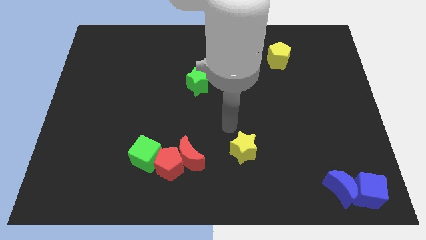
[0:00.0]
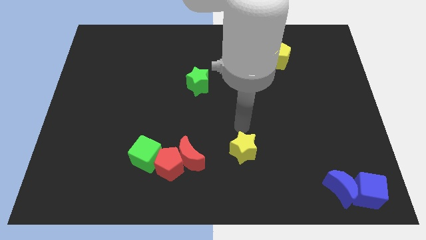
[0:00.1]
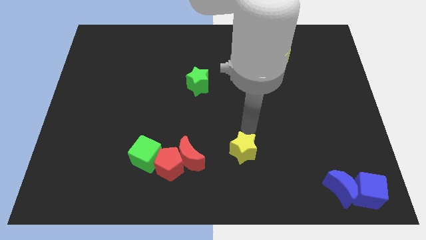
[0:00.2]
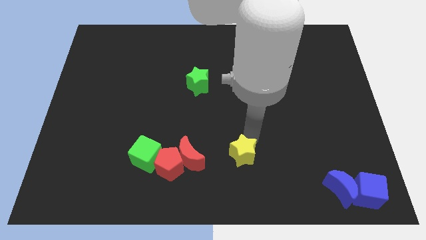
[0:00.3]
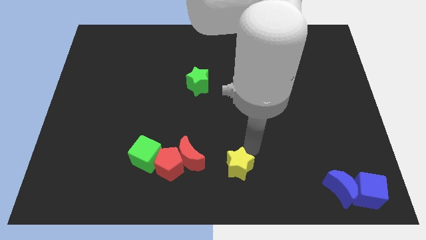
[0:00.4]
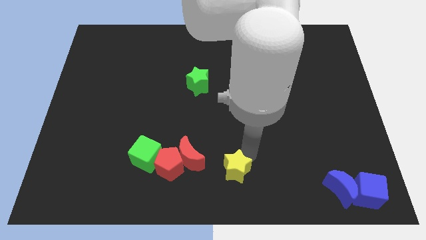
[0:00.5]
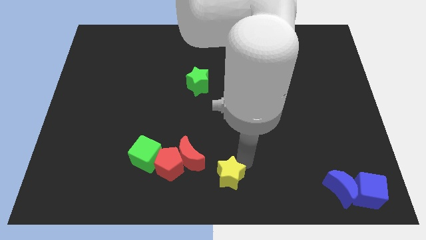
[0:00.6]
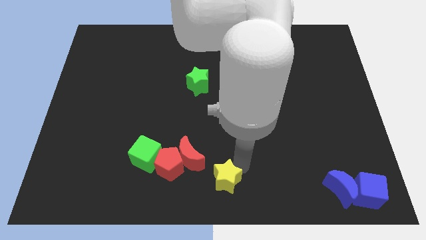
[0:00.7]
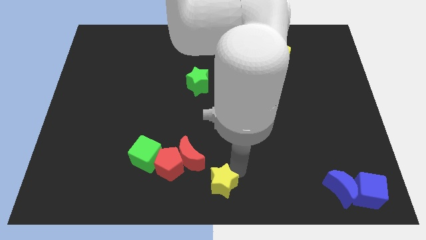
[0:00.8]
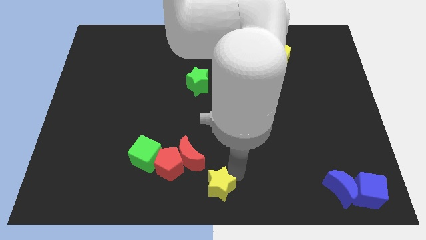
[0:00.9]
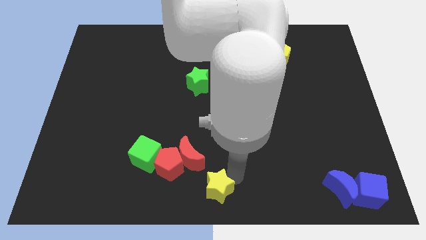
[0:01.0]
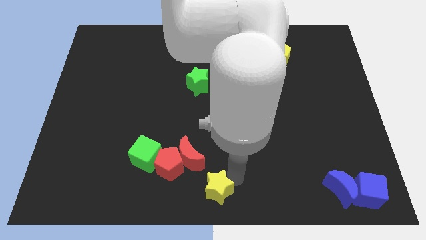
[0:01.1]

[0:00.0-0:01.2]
place the yellow star below the red moon

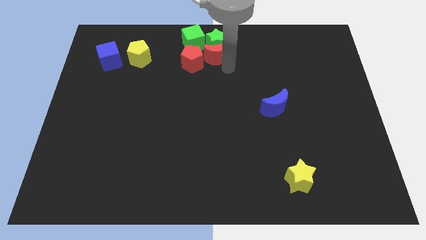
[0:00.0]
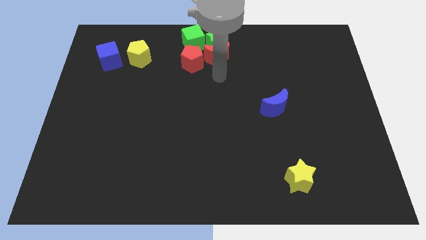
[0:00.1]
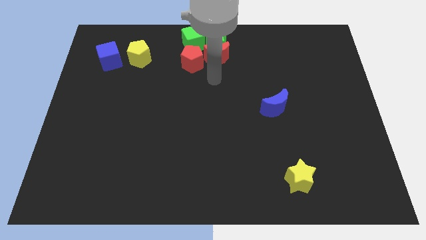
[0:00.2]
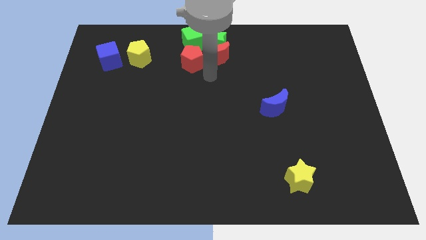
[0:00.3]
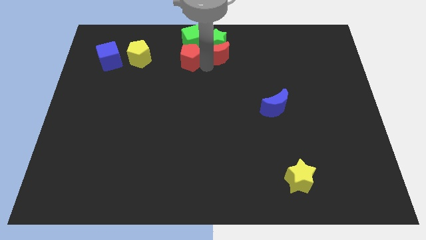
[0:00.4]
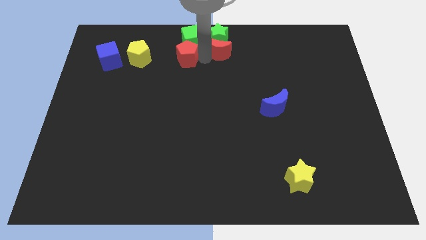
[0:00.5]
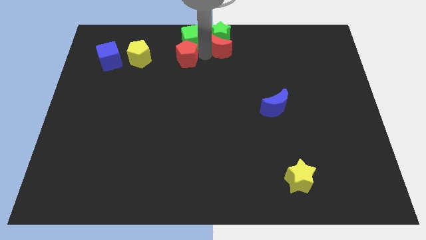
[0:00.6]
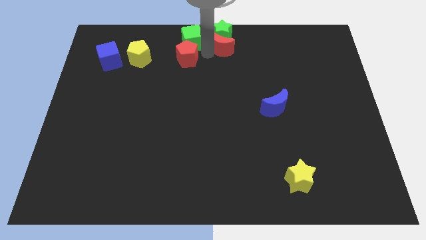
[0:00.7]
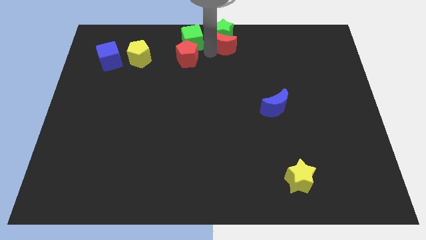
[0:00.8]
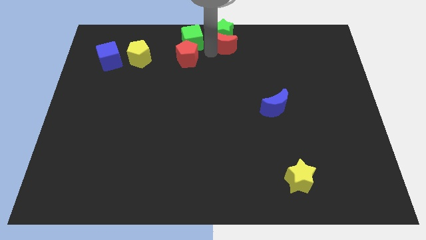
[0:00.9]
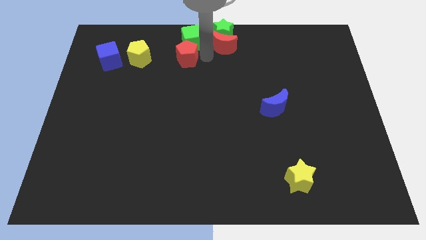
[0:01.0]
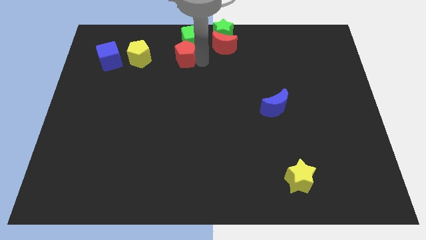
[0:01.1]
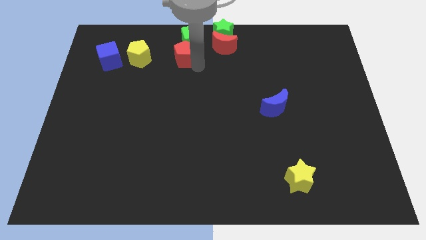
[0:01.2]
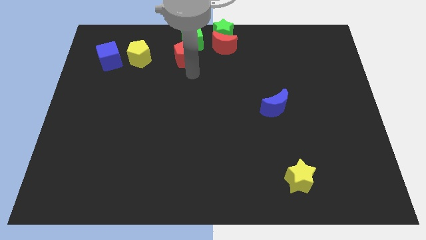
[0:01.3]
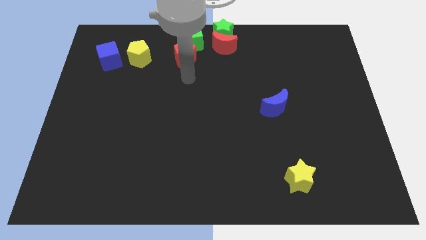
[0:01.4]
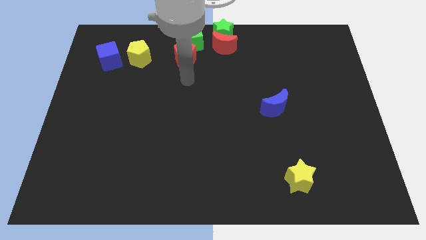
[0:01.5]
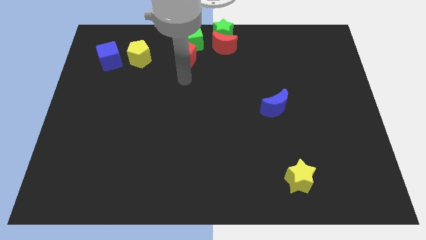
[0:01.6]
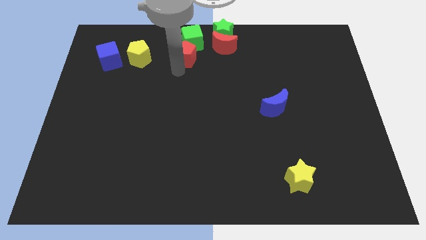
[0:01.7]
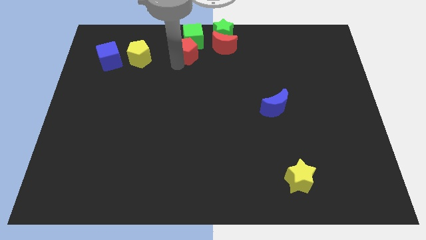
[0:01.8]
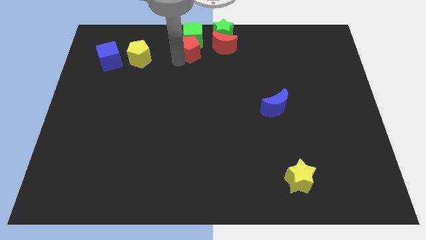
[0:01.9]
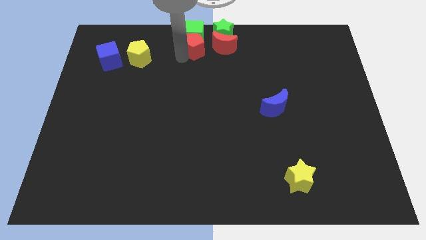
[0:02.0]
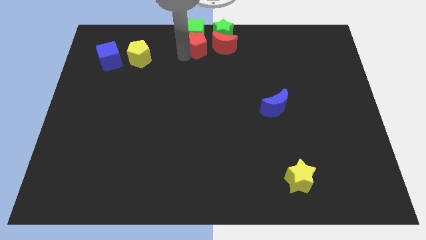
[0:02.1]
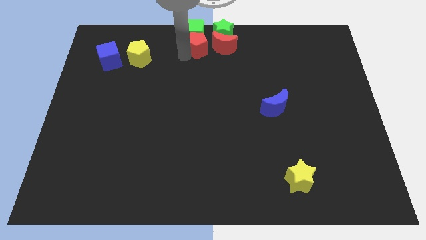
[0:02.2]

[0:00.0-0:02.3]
adjust the green and red blocks towards the top center of the board

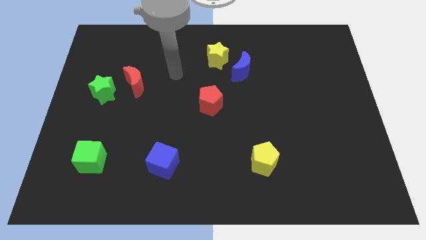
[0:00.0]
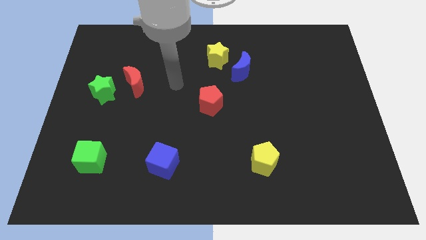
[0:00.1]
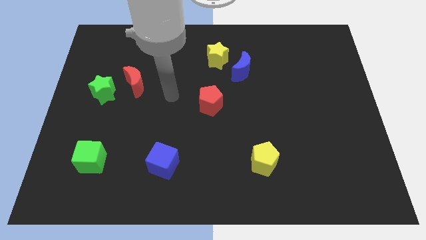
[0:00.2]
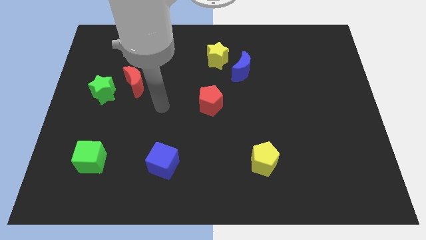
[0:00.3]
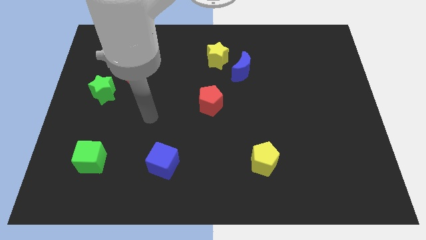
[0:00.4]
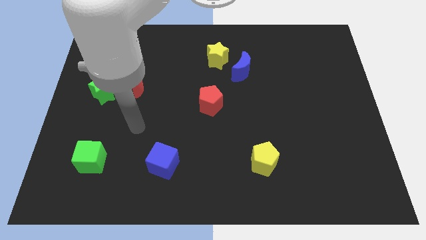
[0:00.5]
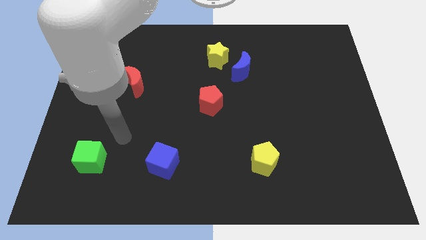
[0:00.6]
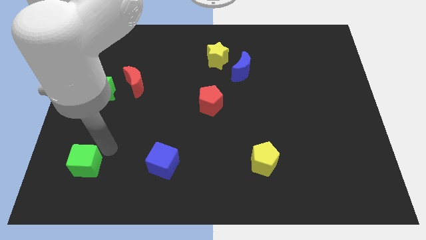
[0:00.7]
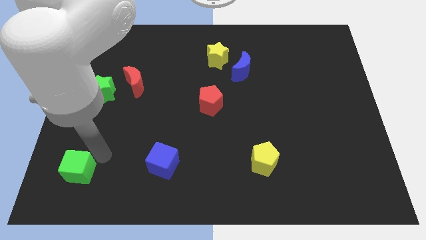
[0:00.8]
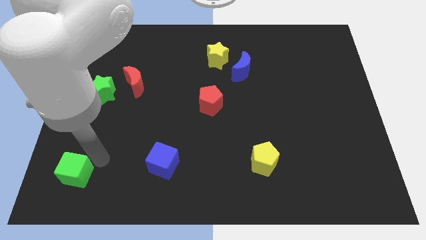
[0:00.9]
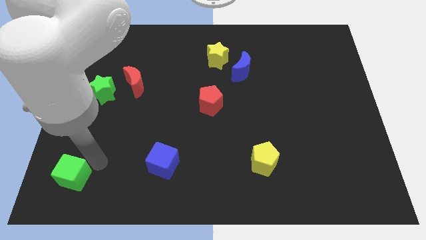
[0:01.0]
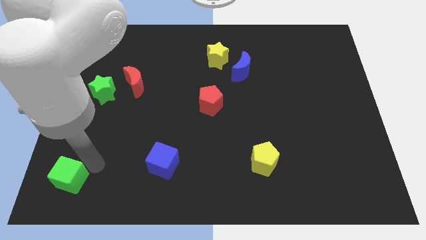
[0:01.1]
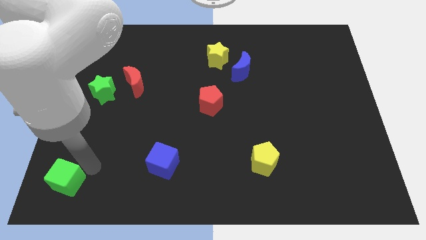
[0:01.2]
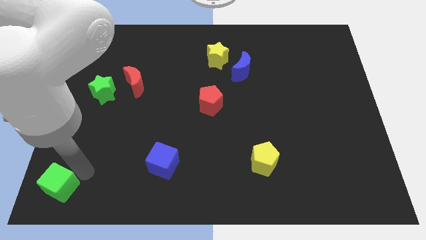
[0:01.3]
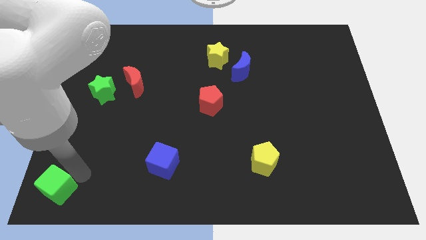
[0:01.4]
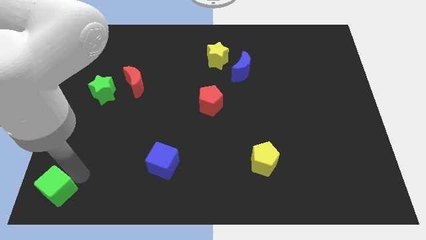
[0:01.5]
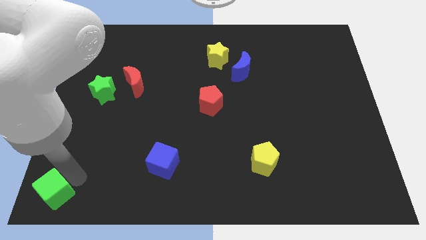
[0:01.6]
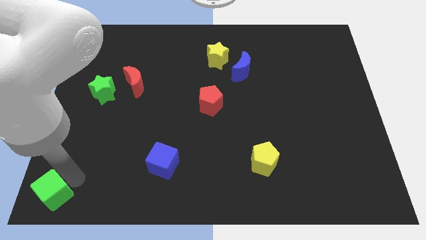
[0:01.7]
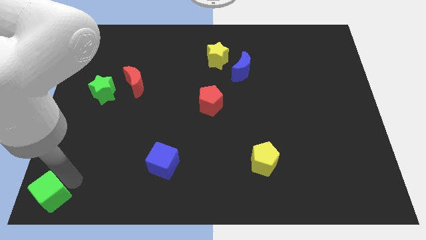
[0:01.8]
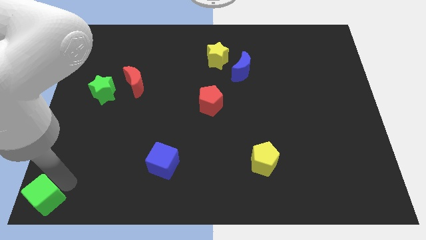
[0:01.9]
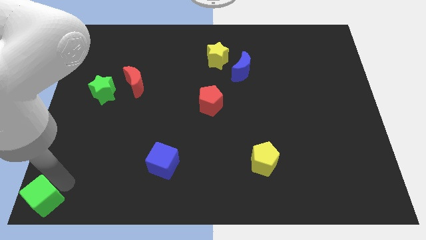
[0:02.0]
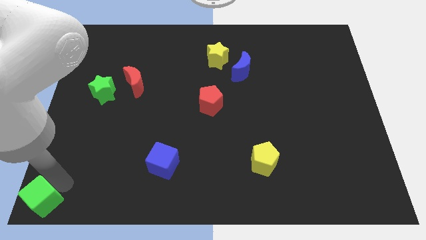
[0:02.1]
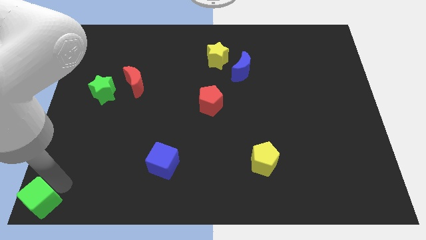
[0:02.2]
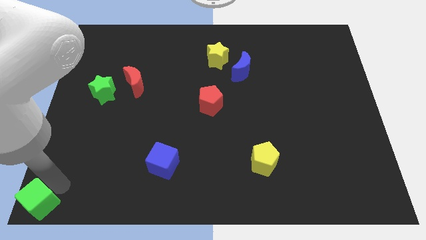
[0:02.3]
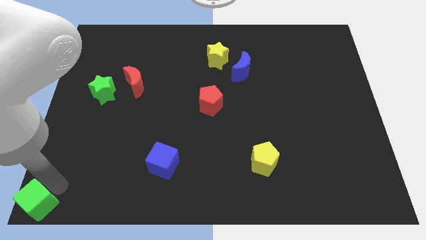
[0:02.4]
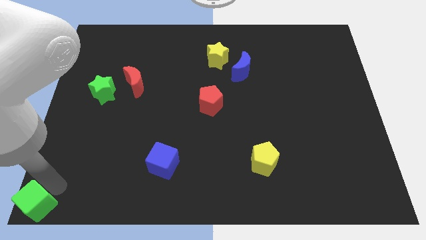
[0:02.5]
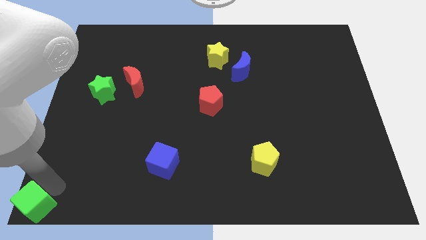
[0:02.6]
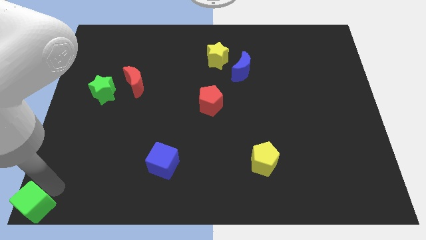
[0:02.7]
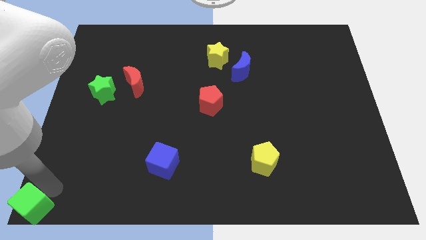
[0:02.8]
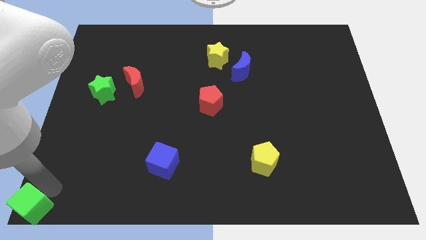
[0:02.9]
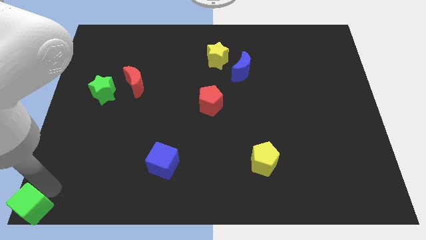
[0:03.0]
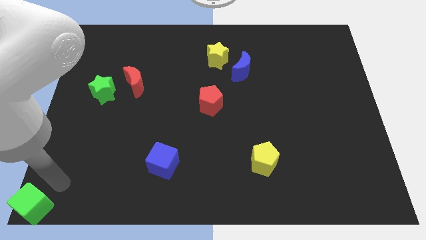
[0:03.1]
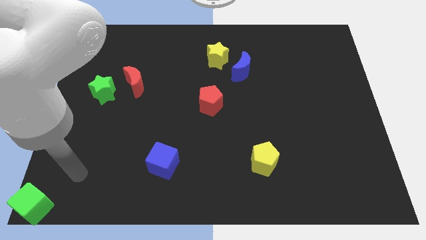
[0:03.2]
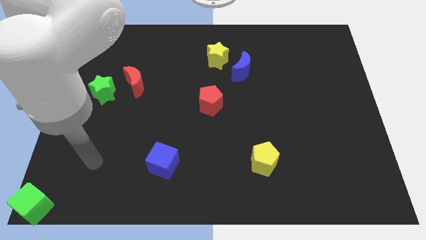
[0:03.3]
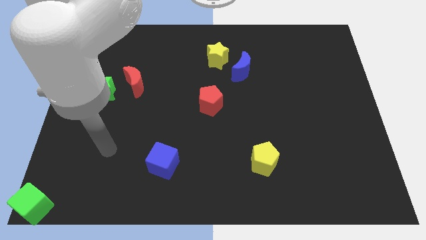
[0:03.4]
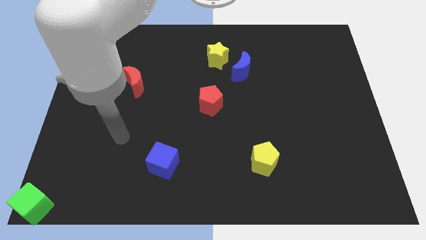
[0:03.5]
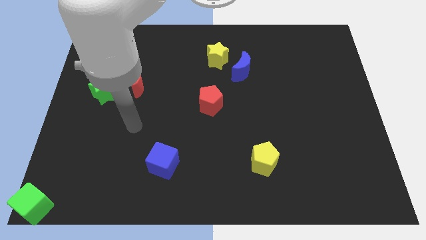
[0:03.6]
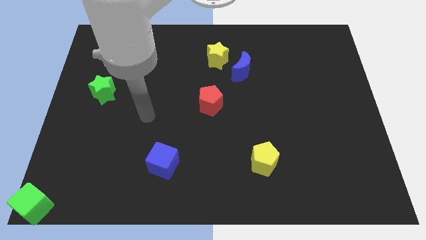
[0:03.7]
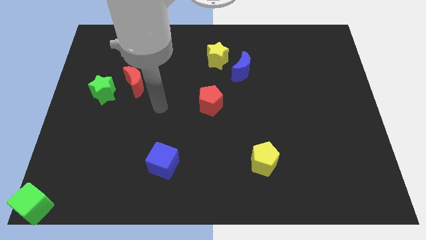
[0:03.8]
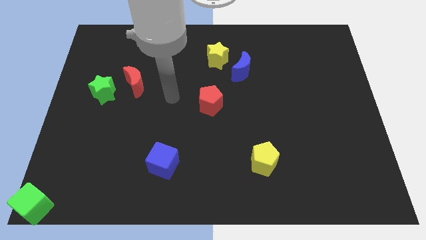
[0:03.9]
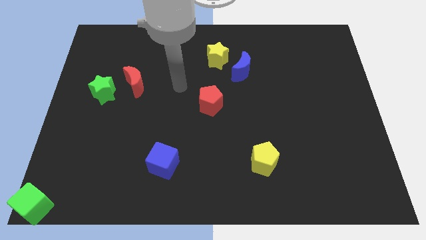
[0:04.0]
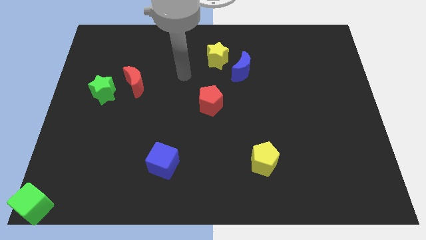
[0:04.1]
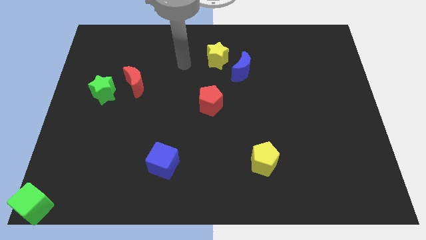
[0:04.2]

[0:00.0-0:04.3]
place the green cube towards the bottom left corner of the board

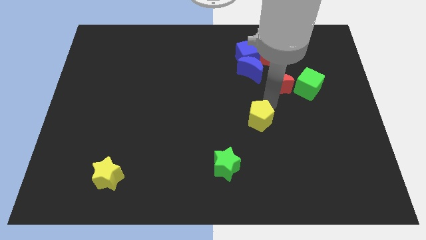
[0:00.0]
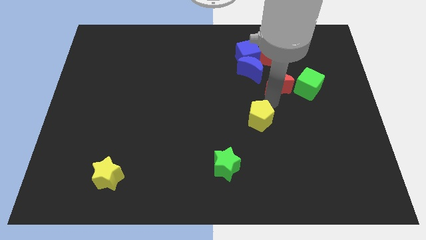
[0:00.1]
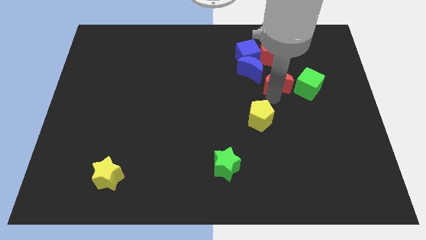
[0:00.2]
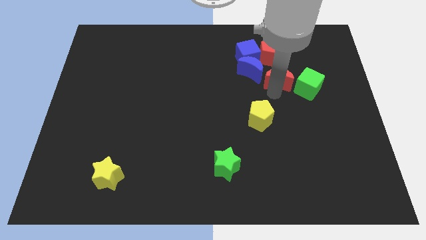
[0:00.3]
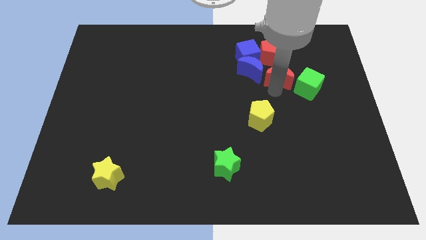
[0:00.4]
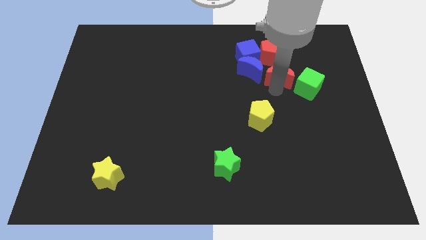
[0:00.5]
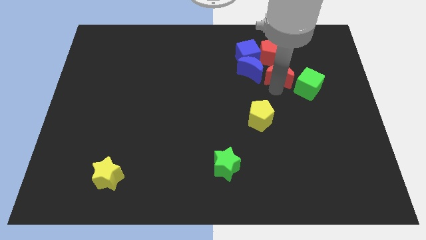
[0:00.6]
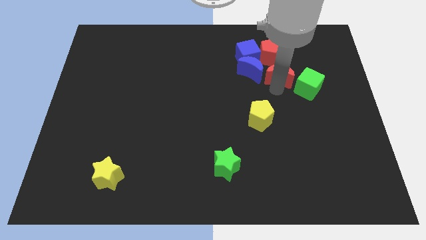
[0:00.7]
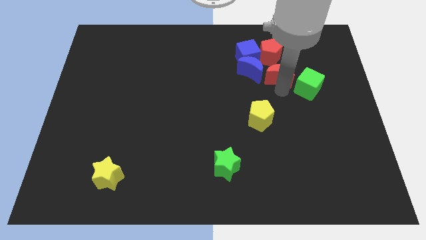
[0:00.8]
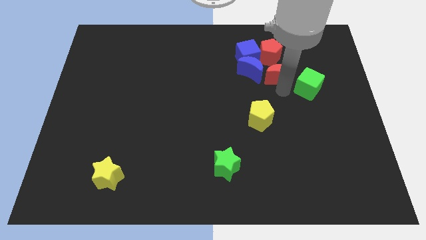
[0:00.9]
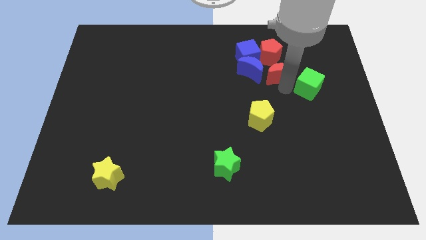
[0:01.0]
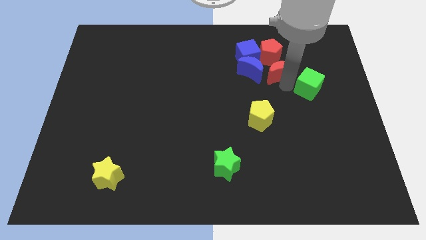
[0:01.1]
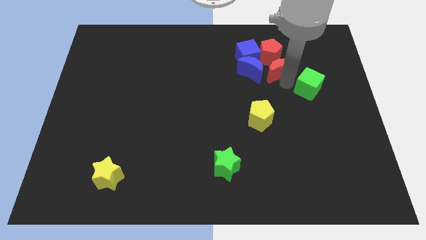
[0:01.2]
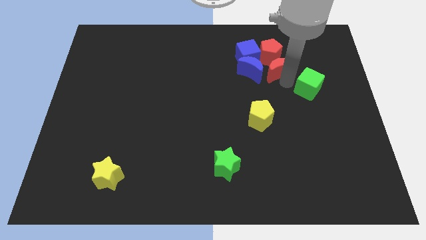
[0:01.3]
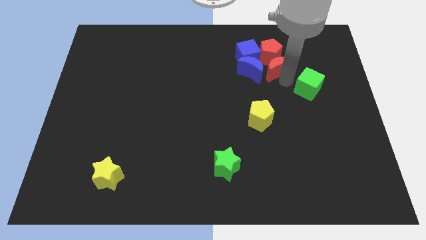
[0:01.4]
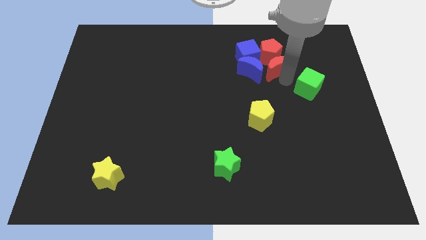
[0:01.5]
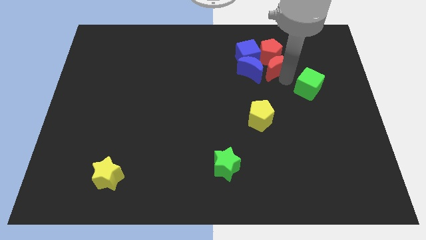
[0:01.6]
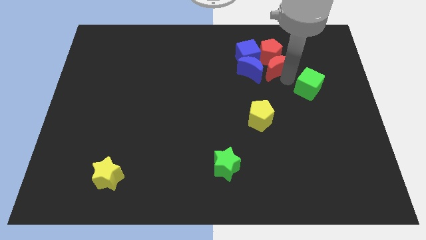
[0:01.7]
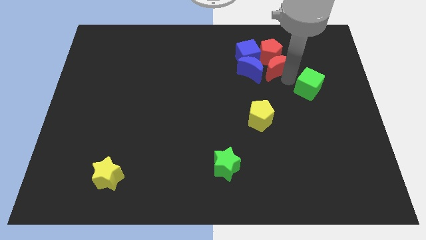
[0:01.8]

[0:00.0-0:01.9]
place the red crescent below the red pentagon
